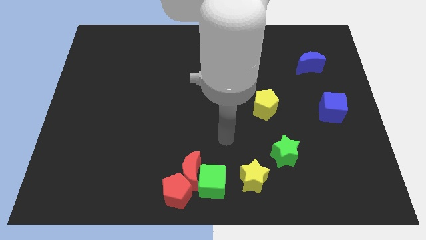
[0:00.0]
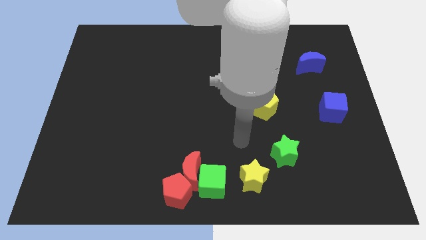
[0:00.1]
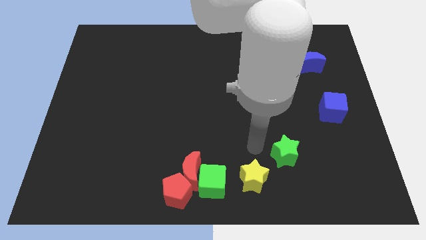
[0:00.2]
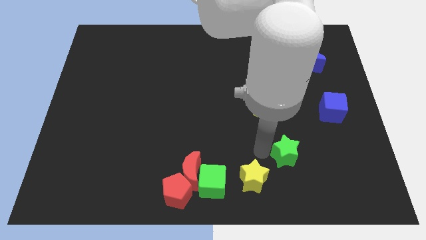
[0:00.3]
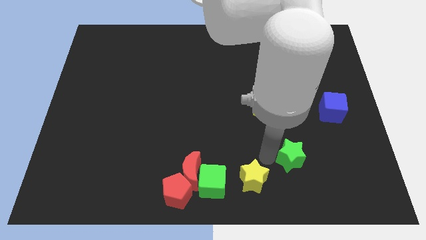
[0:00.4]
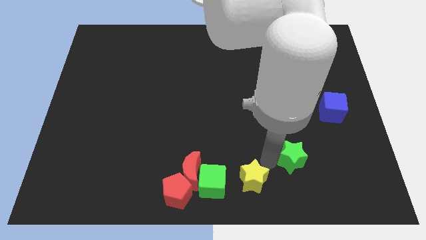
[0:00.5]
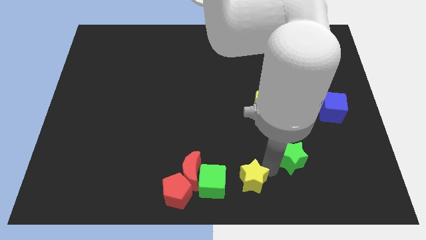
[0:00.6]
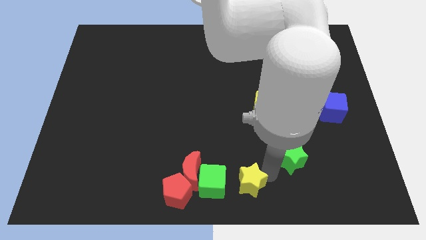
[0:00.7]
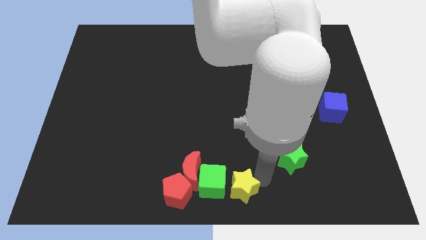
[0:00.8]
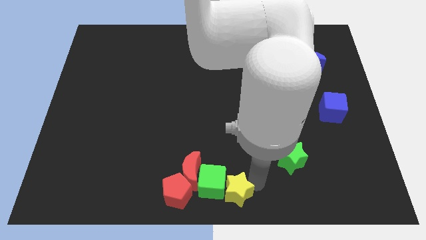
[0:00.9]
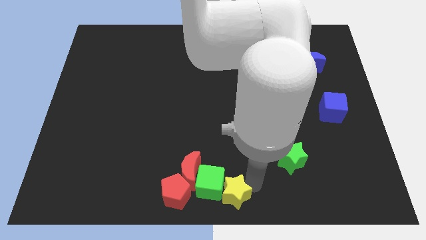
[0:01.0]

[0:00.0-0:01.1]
drag the yellow star into the right side of the green cube

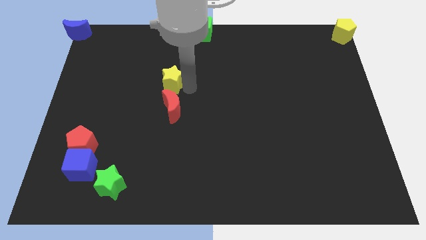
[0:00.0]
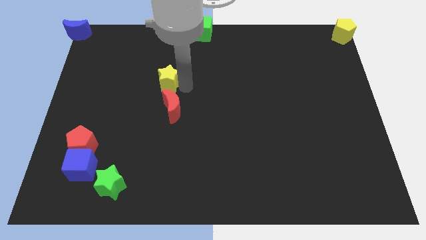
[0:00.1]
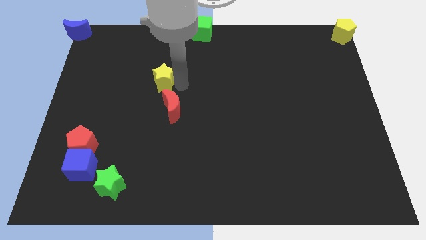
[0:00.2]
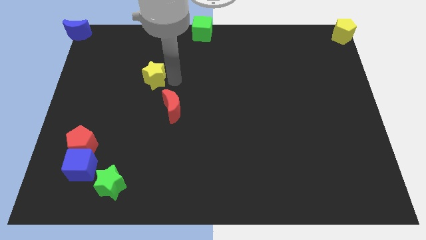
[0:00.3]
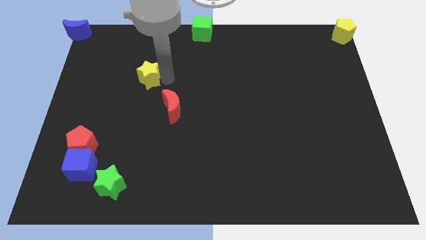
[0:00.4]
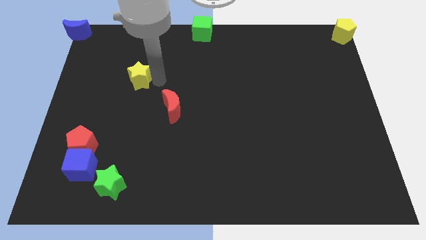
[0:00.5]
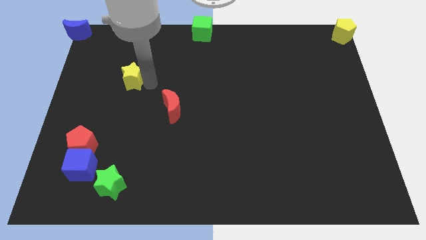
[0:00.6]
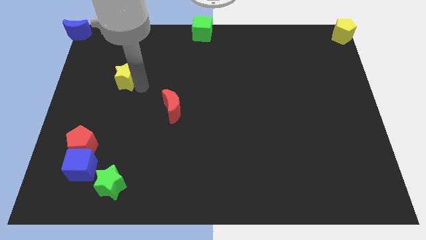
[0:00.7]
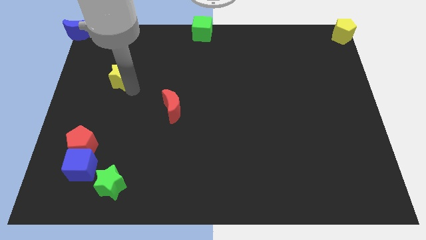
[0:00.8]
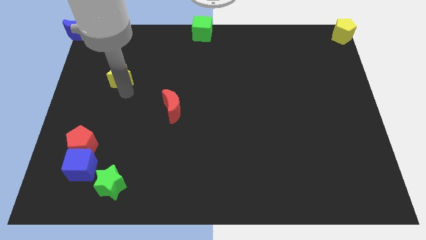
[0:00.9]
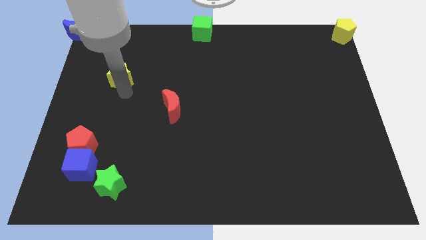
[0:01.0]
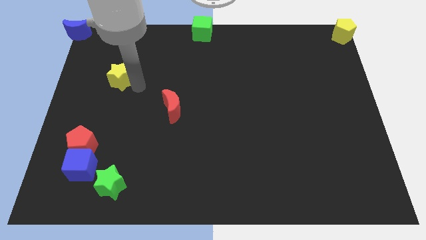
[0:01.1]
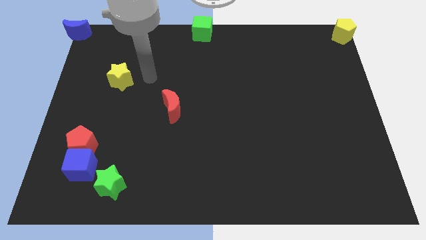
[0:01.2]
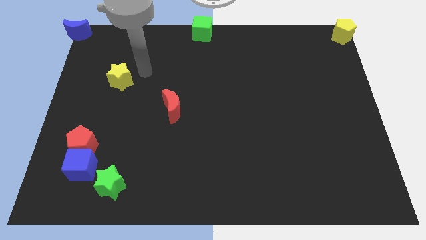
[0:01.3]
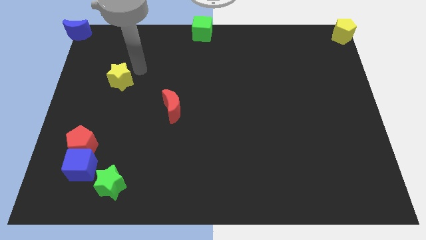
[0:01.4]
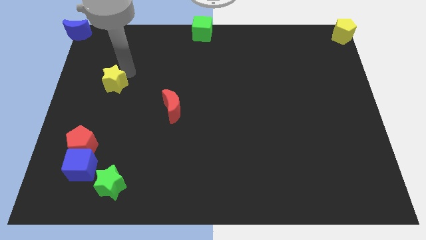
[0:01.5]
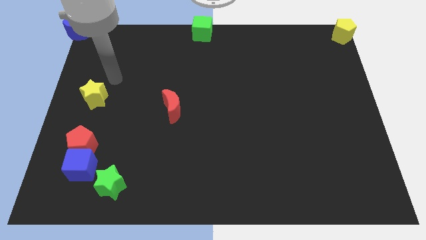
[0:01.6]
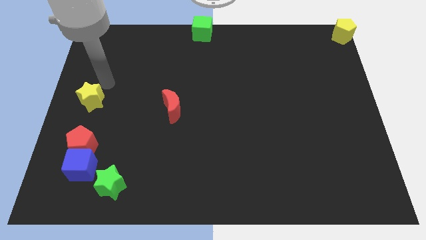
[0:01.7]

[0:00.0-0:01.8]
push the yellow star towards the center left of the board

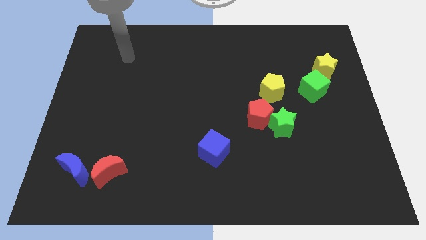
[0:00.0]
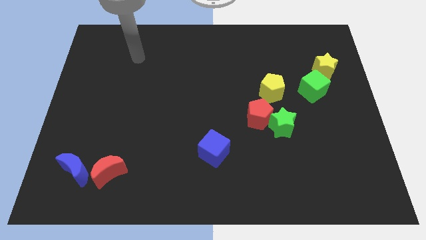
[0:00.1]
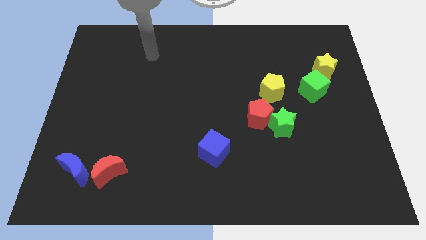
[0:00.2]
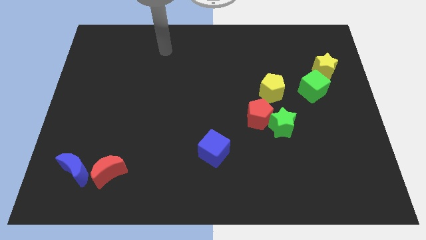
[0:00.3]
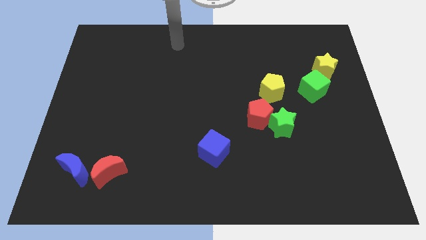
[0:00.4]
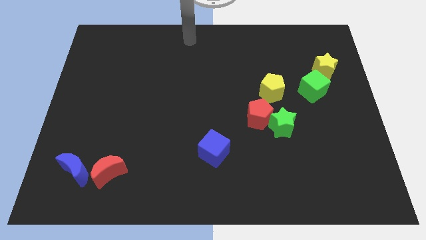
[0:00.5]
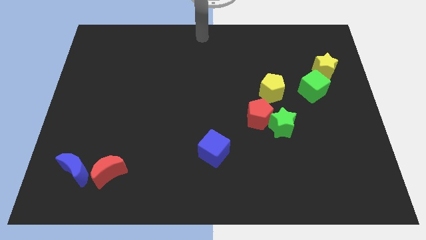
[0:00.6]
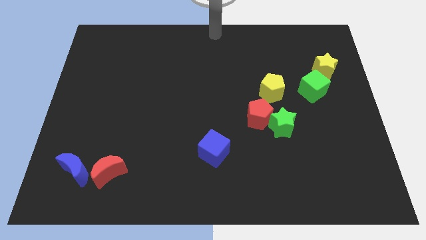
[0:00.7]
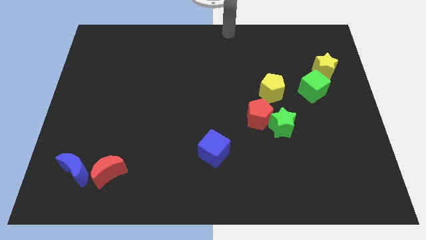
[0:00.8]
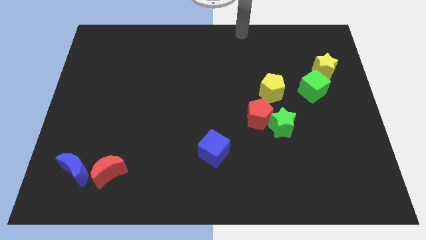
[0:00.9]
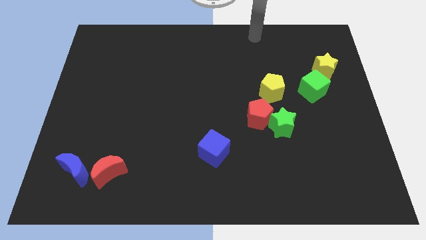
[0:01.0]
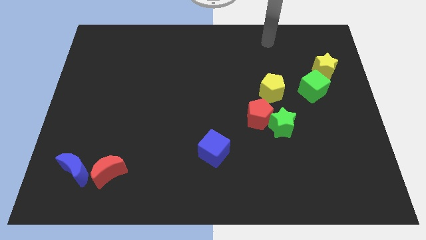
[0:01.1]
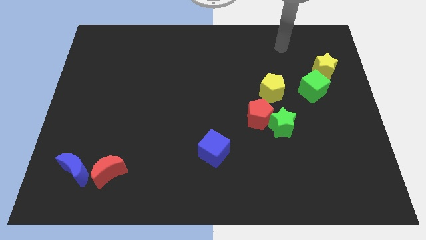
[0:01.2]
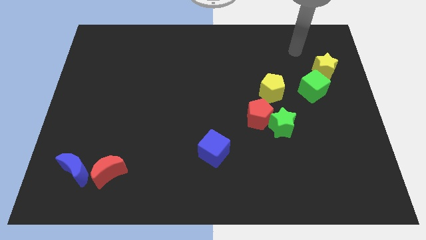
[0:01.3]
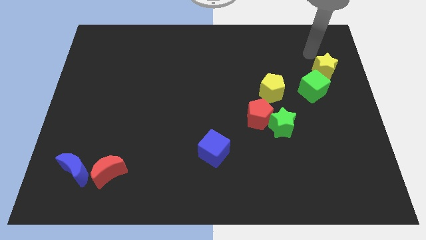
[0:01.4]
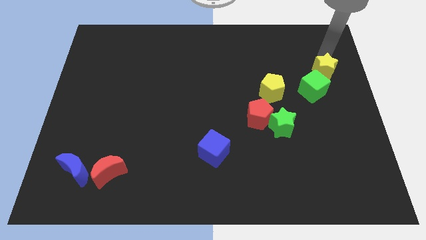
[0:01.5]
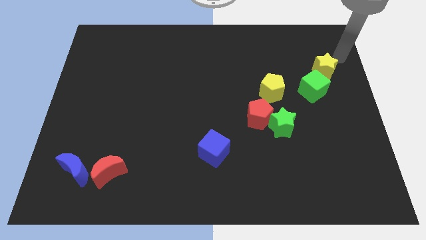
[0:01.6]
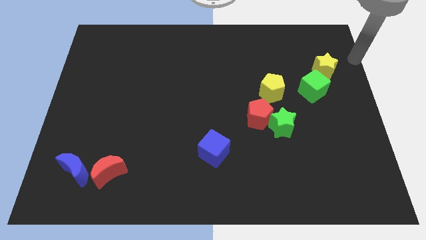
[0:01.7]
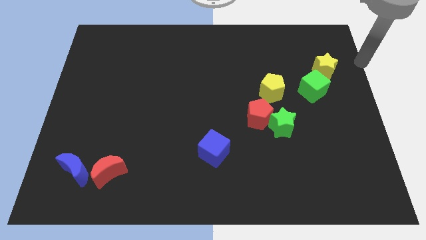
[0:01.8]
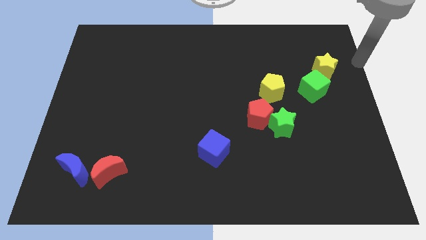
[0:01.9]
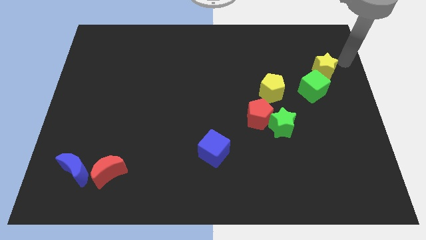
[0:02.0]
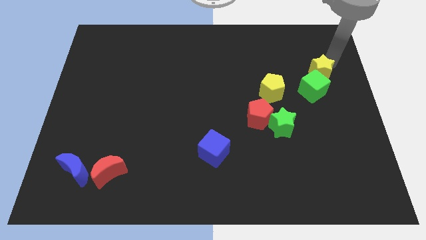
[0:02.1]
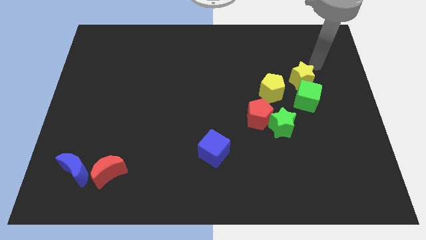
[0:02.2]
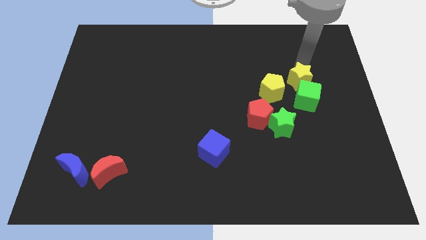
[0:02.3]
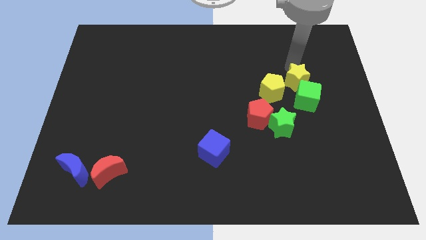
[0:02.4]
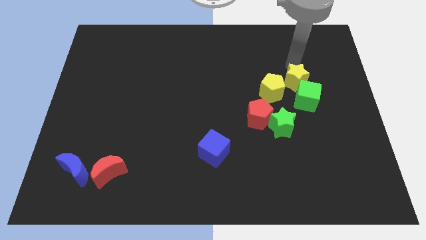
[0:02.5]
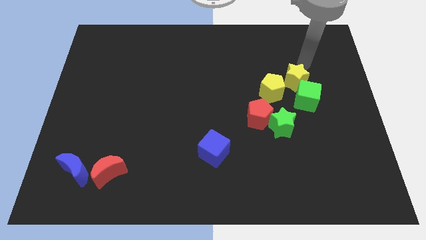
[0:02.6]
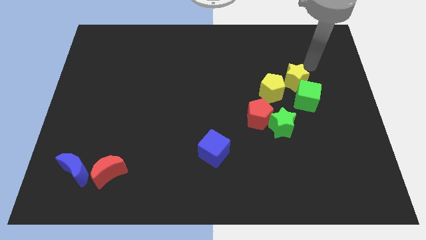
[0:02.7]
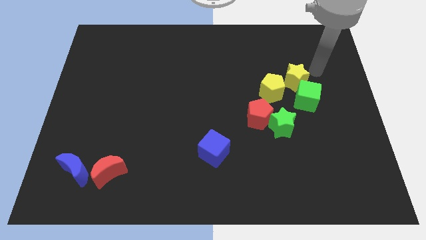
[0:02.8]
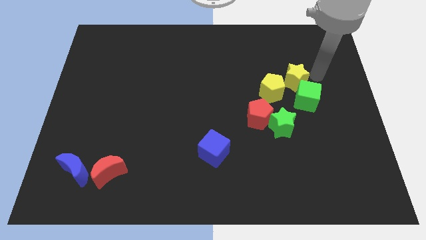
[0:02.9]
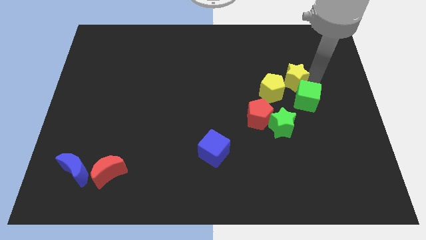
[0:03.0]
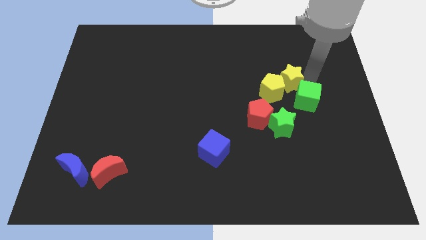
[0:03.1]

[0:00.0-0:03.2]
place your hand at the right side of the yellow star

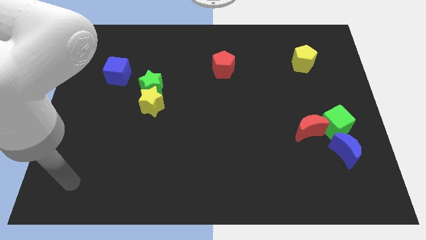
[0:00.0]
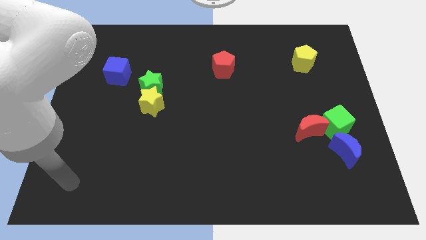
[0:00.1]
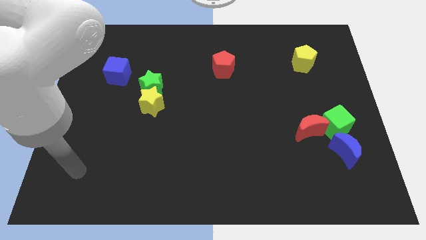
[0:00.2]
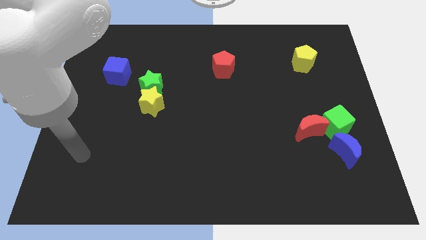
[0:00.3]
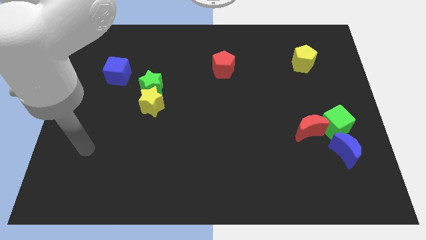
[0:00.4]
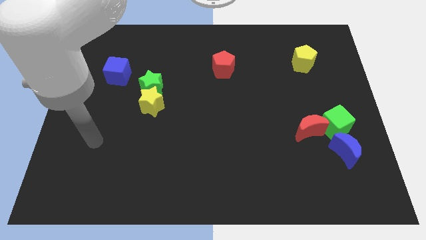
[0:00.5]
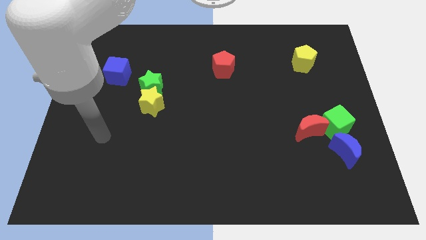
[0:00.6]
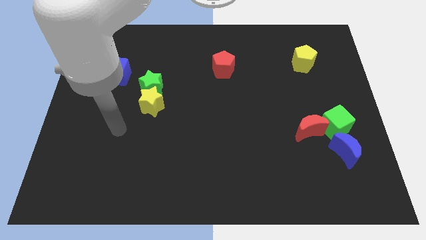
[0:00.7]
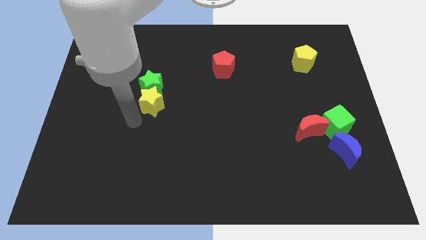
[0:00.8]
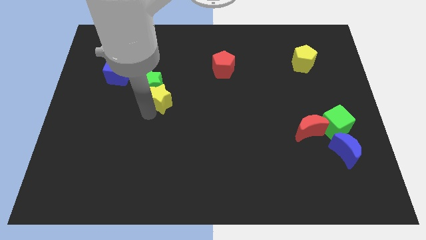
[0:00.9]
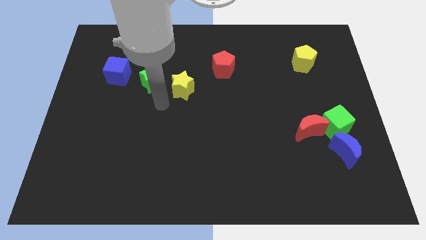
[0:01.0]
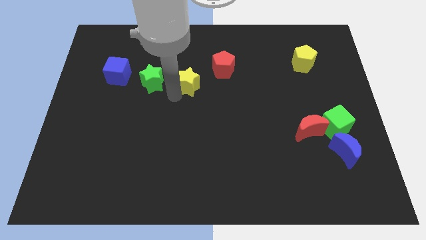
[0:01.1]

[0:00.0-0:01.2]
place yellow star to the right of green star

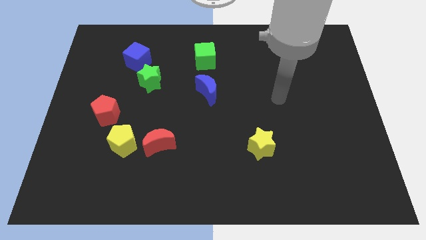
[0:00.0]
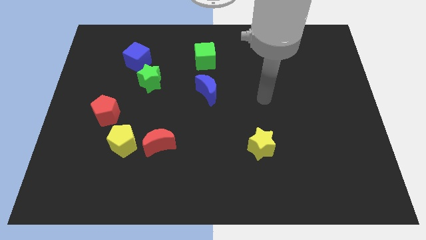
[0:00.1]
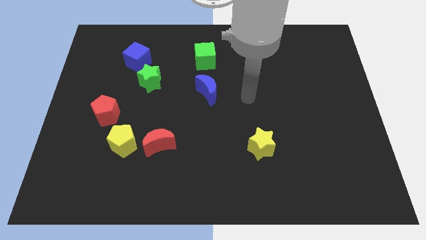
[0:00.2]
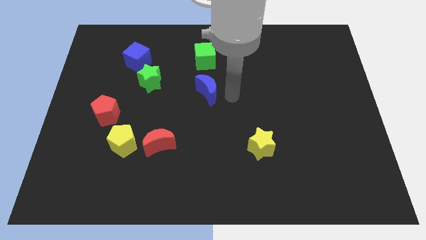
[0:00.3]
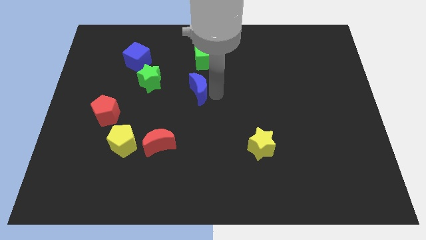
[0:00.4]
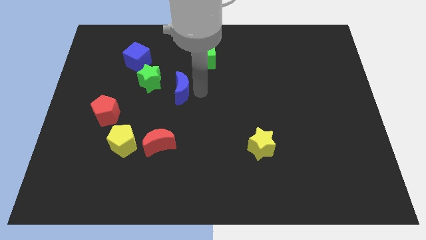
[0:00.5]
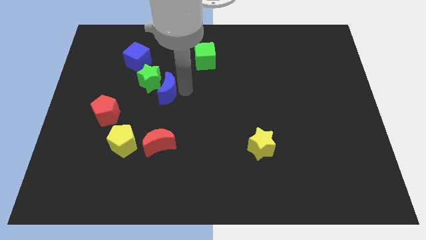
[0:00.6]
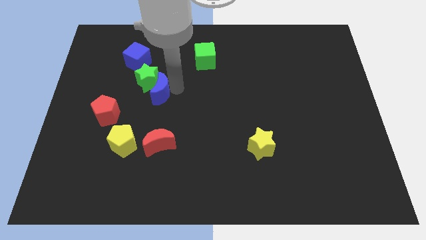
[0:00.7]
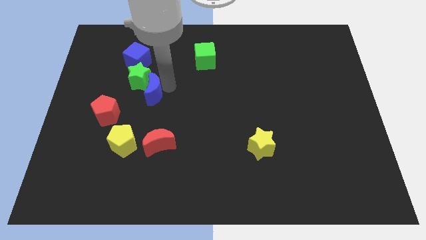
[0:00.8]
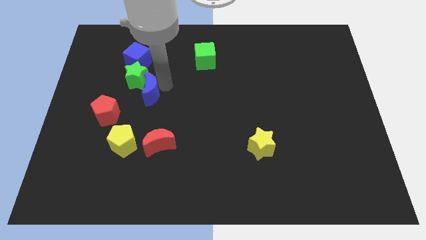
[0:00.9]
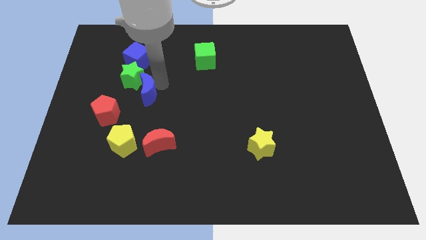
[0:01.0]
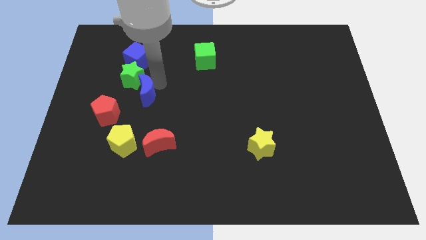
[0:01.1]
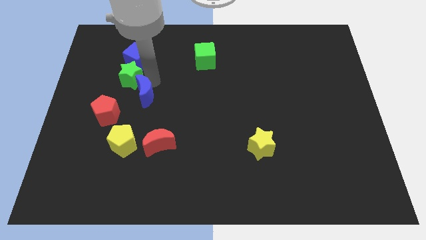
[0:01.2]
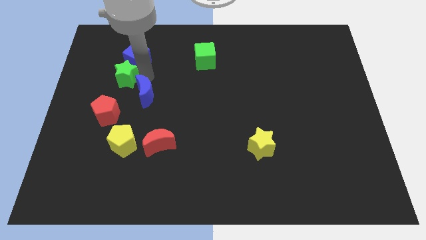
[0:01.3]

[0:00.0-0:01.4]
push the blue moon into the green star

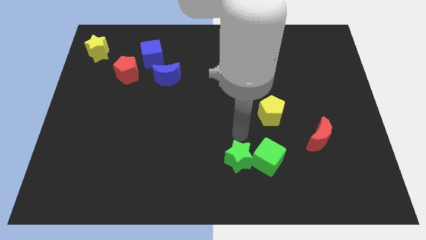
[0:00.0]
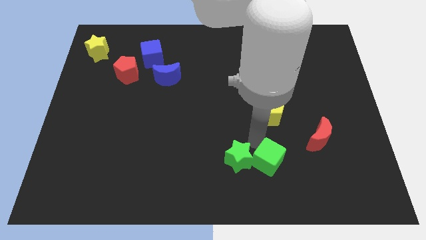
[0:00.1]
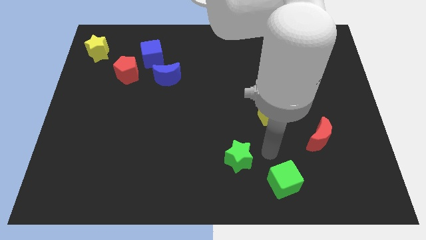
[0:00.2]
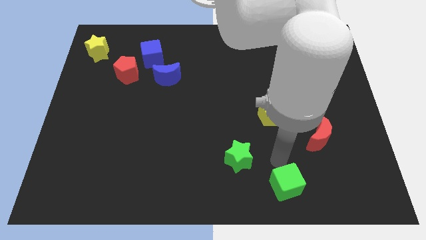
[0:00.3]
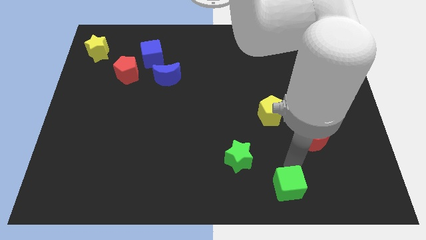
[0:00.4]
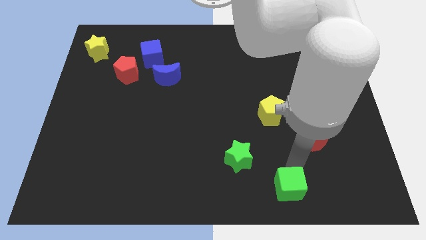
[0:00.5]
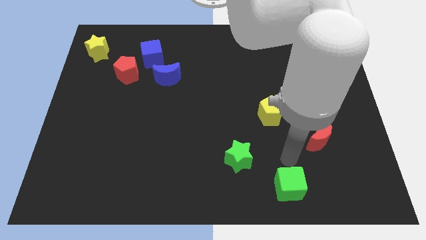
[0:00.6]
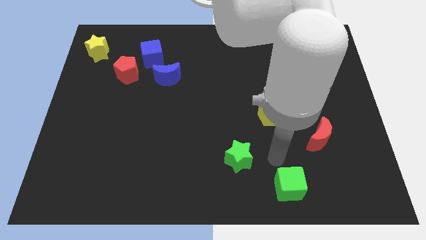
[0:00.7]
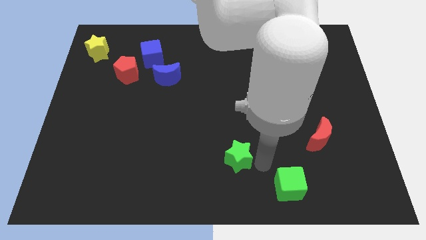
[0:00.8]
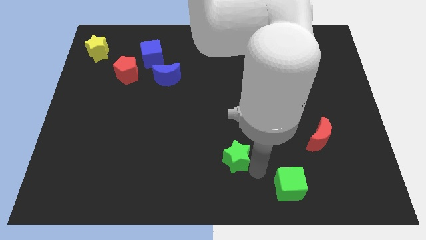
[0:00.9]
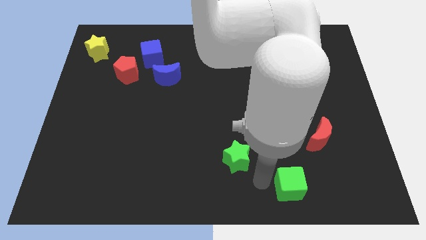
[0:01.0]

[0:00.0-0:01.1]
push green cube to the bottom of the board
